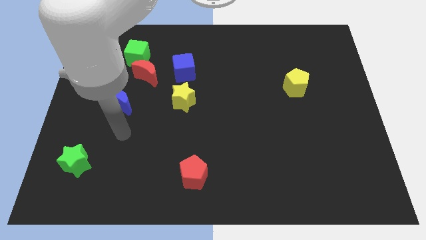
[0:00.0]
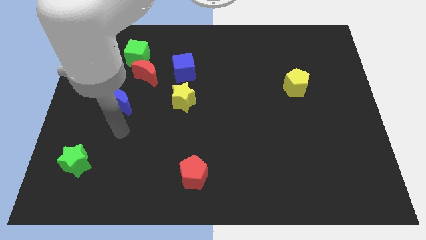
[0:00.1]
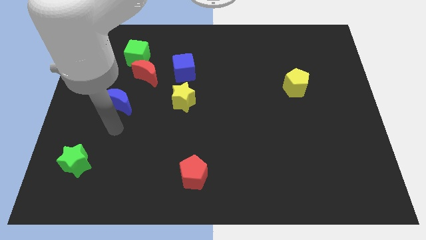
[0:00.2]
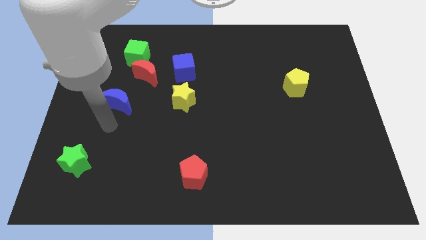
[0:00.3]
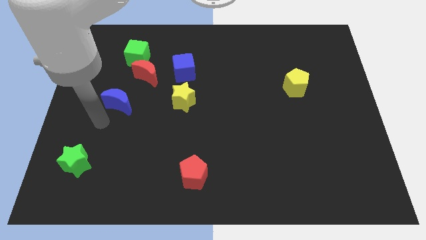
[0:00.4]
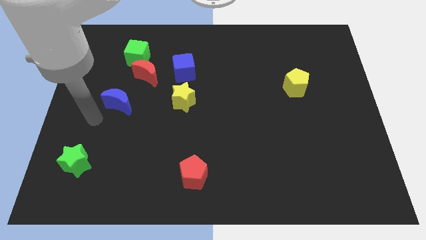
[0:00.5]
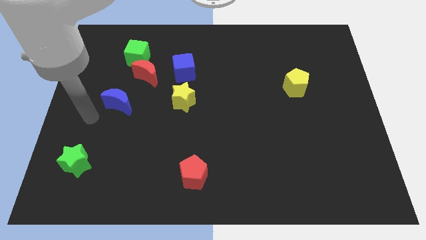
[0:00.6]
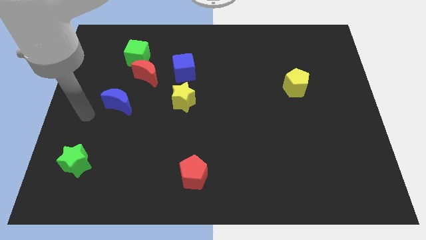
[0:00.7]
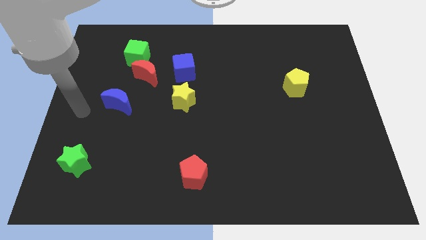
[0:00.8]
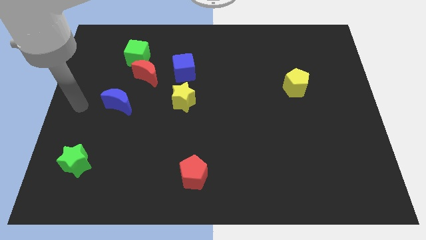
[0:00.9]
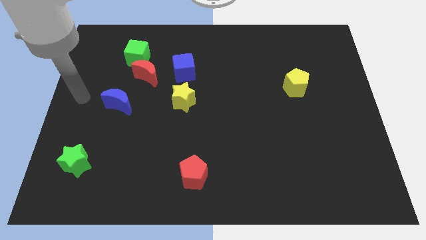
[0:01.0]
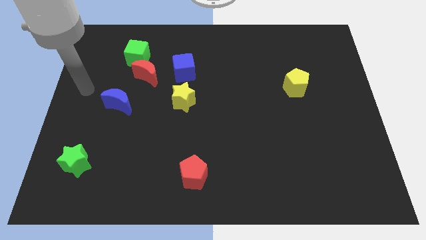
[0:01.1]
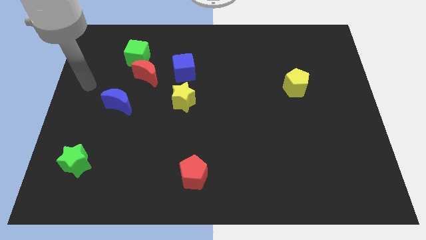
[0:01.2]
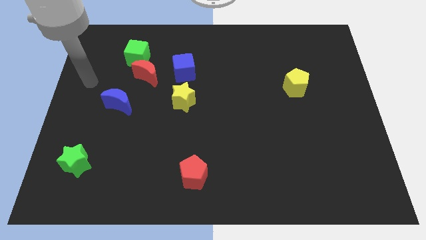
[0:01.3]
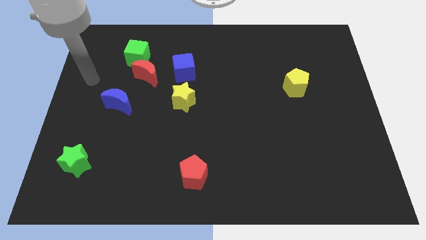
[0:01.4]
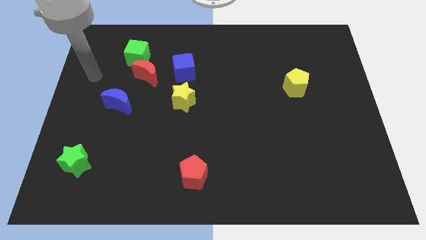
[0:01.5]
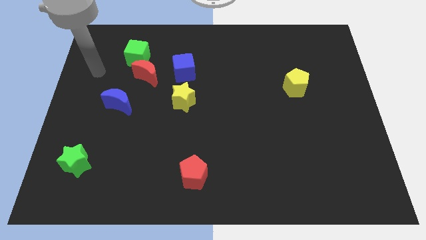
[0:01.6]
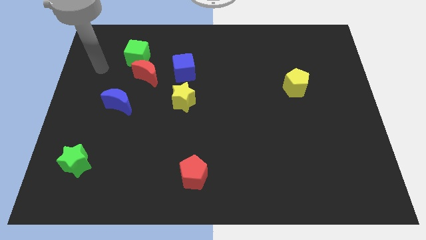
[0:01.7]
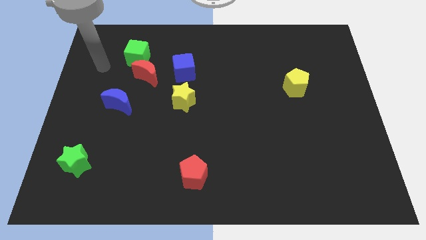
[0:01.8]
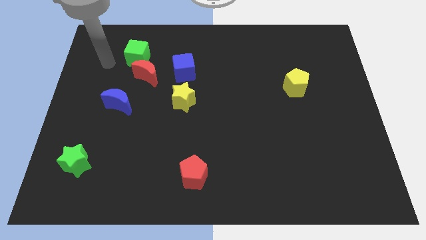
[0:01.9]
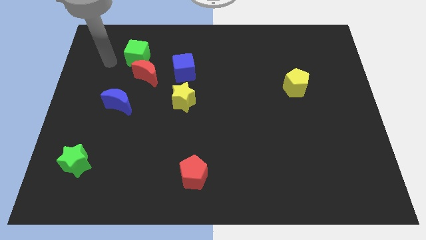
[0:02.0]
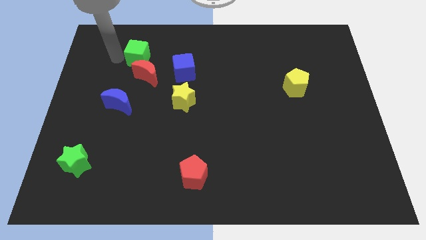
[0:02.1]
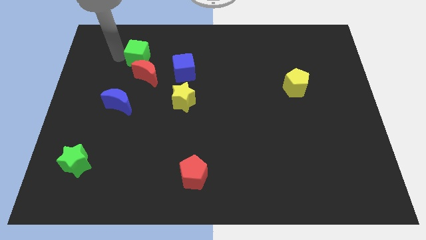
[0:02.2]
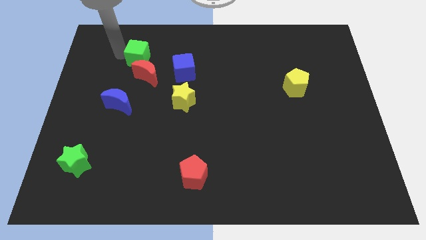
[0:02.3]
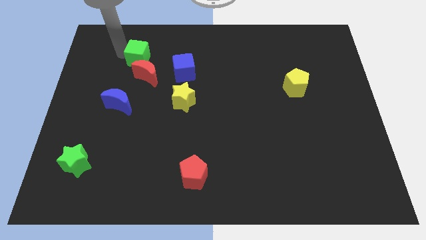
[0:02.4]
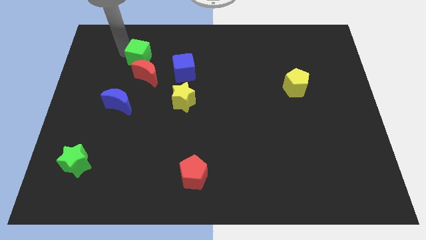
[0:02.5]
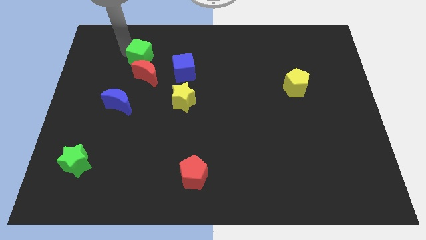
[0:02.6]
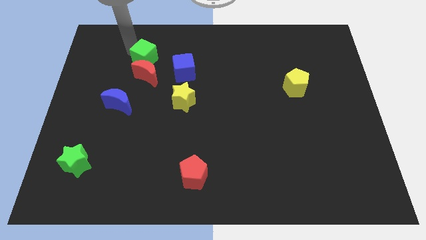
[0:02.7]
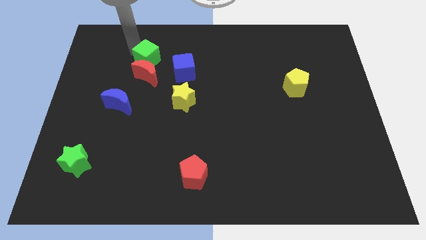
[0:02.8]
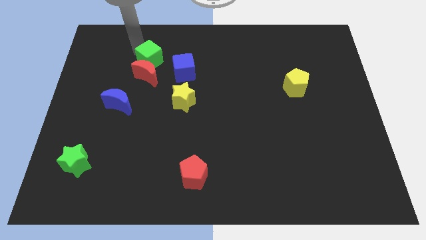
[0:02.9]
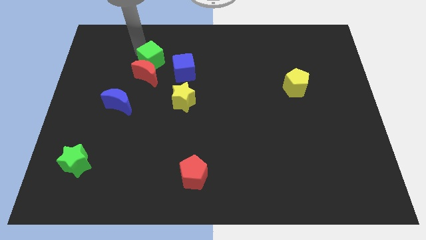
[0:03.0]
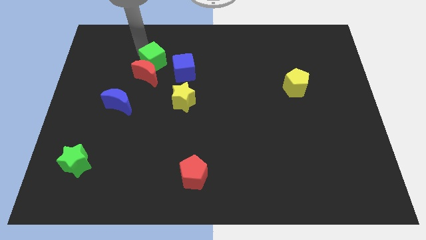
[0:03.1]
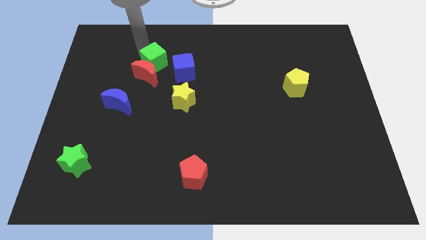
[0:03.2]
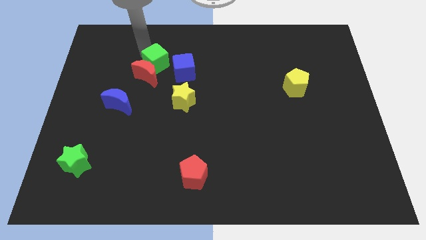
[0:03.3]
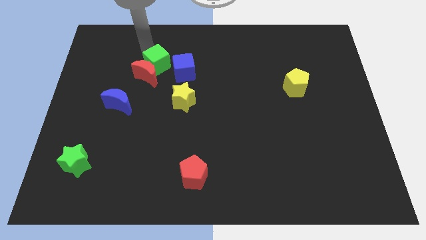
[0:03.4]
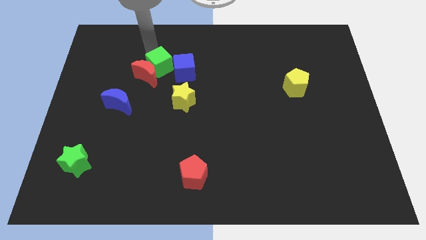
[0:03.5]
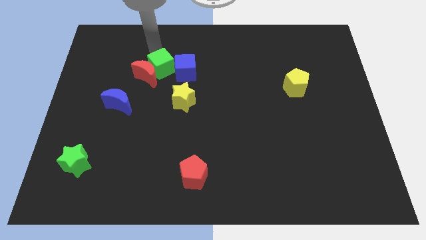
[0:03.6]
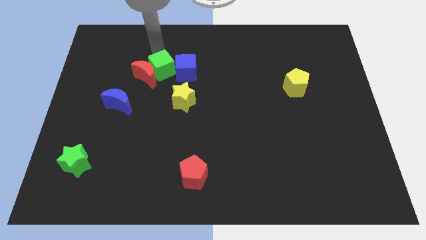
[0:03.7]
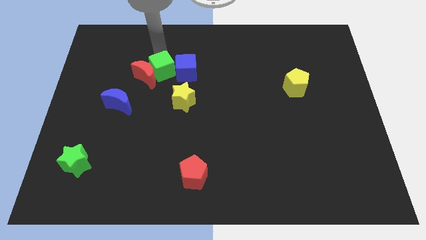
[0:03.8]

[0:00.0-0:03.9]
put the green cube next to the blue cube

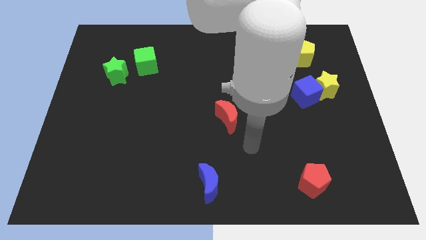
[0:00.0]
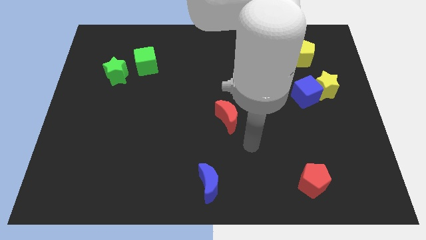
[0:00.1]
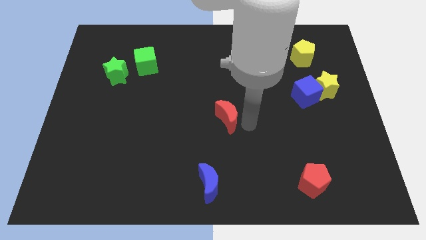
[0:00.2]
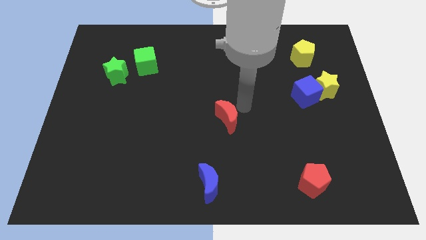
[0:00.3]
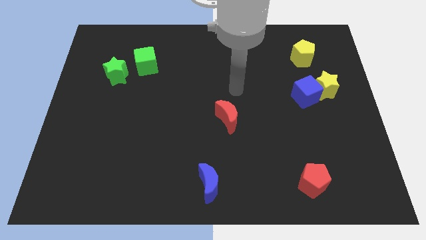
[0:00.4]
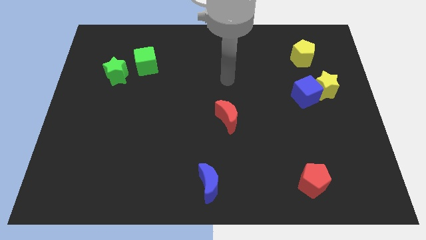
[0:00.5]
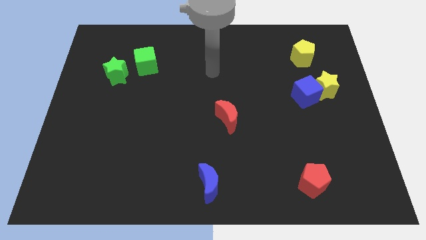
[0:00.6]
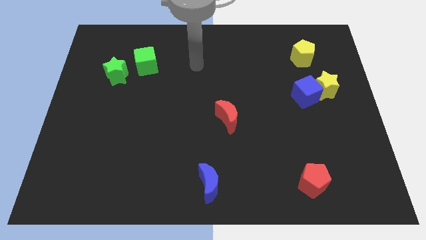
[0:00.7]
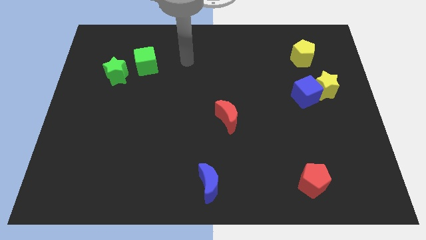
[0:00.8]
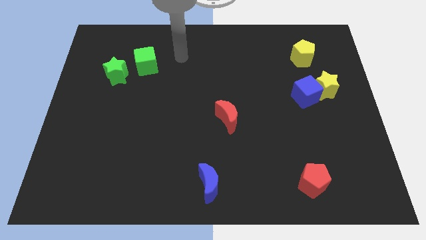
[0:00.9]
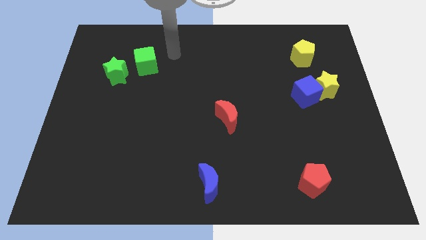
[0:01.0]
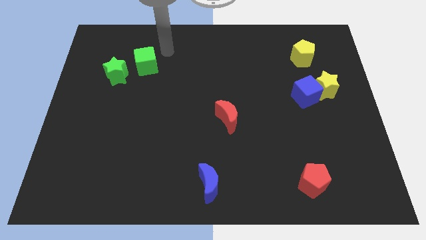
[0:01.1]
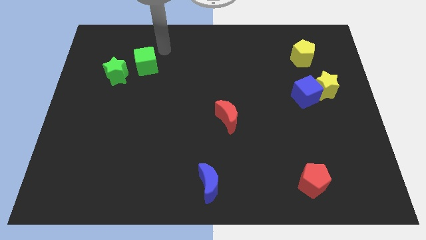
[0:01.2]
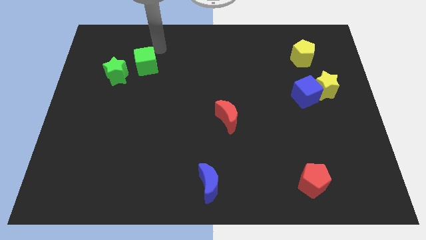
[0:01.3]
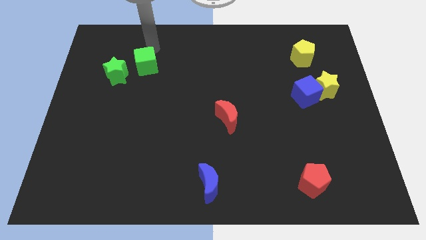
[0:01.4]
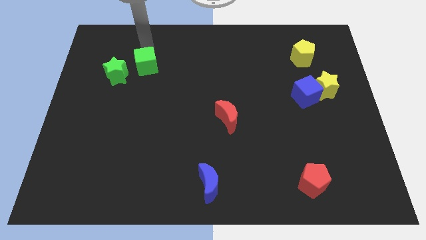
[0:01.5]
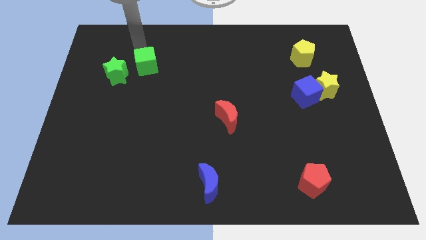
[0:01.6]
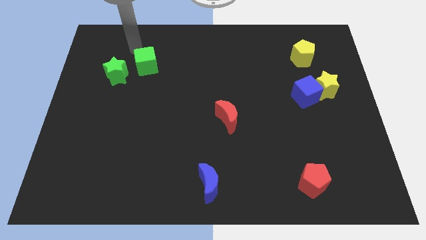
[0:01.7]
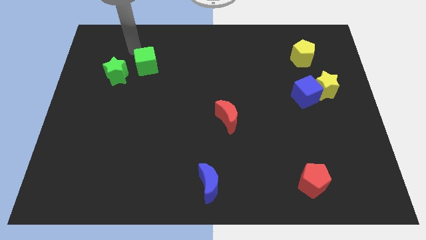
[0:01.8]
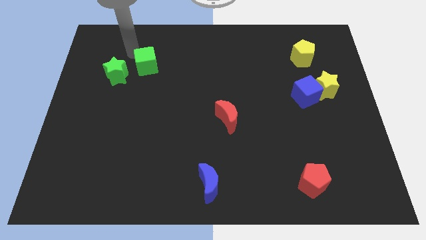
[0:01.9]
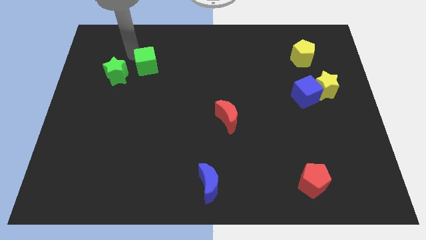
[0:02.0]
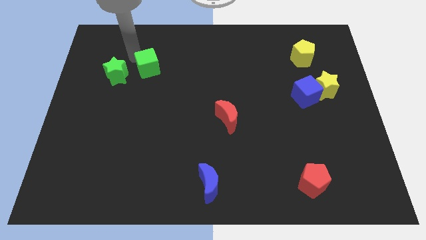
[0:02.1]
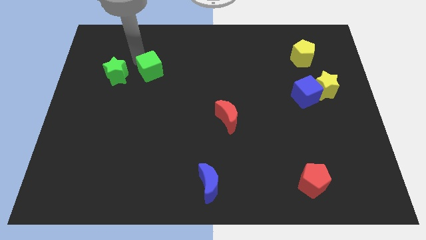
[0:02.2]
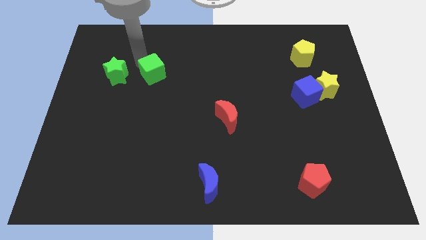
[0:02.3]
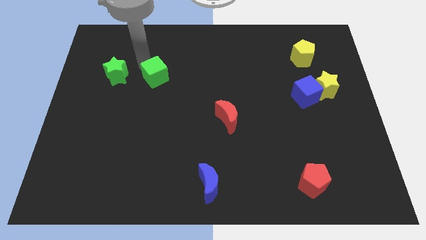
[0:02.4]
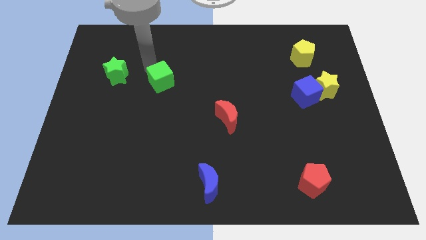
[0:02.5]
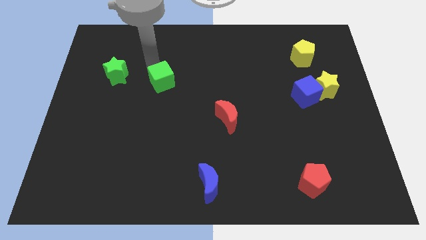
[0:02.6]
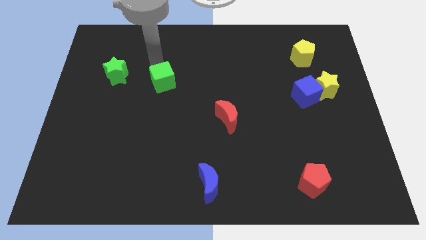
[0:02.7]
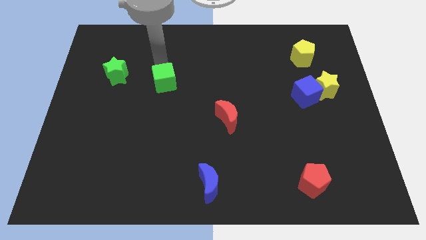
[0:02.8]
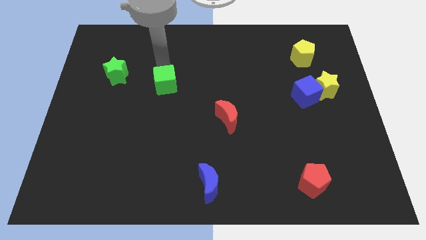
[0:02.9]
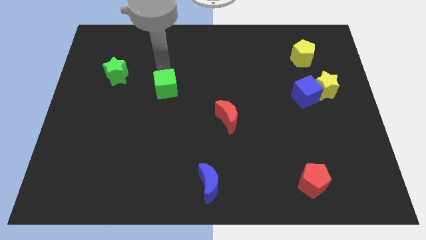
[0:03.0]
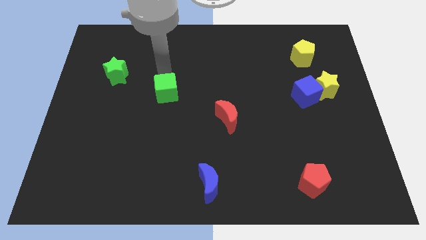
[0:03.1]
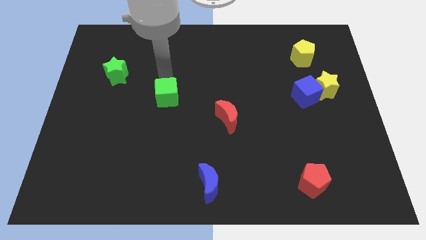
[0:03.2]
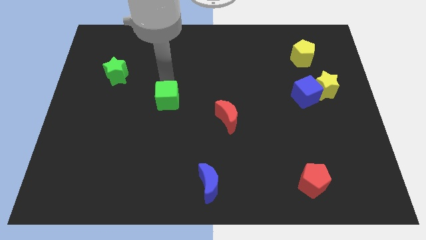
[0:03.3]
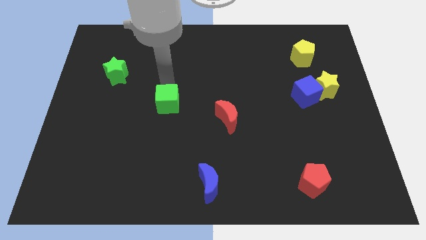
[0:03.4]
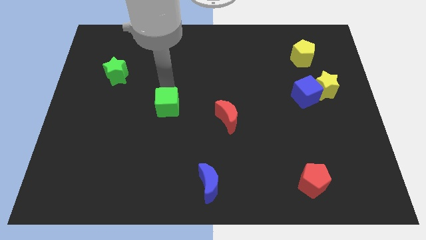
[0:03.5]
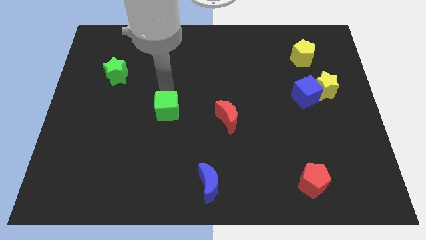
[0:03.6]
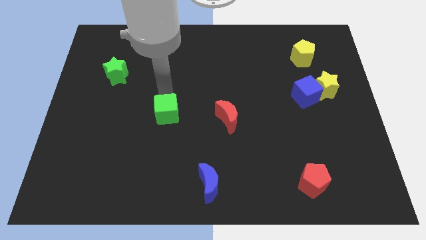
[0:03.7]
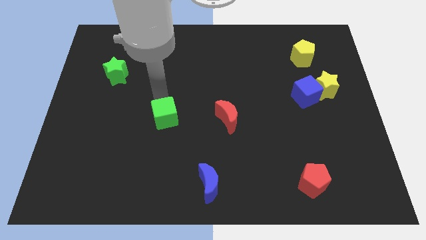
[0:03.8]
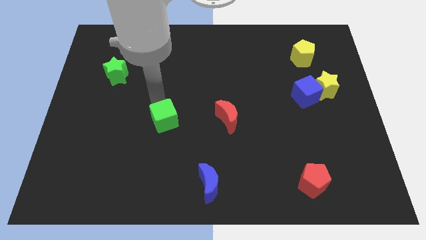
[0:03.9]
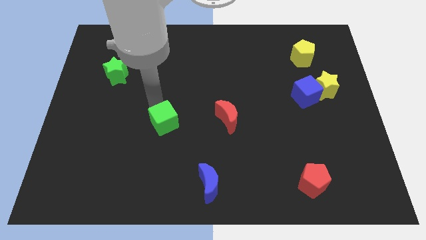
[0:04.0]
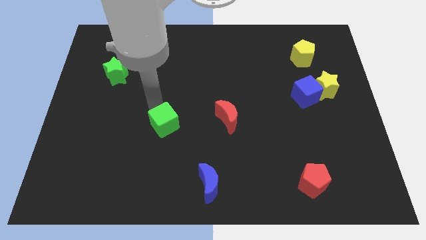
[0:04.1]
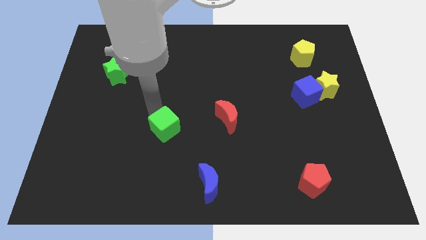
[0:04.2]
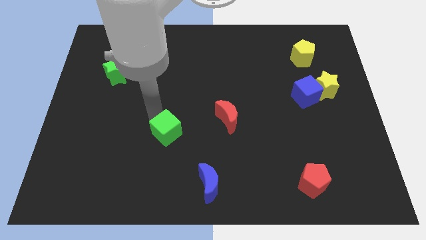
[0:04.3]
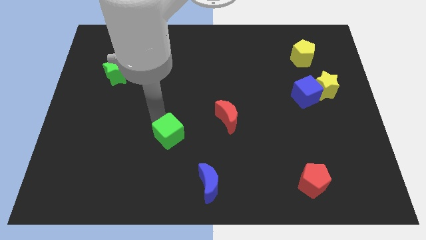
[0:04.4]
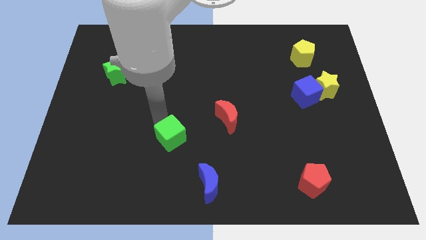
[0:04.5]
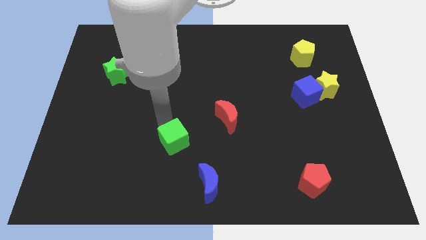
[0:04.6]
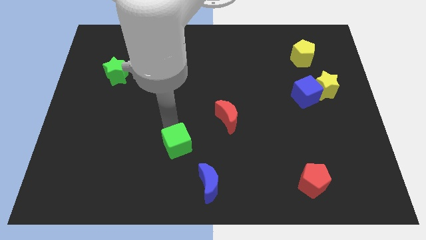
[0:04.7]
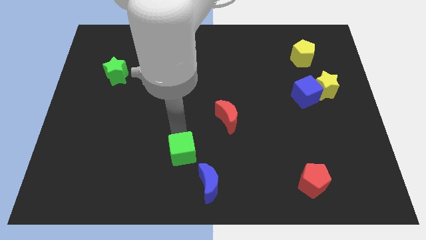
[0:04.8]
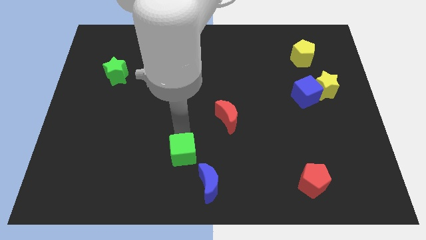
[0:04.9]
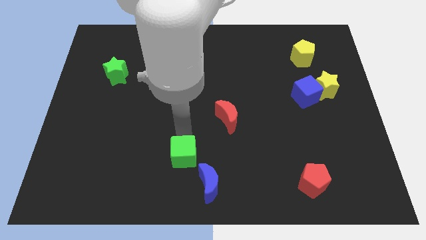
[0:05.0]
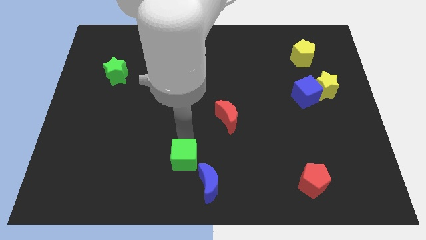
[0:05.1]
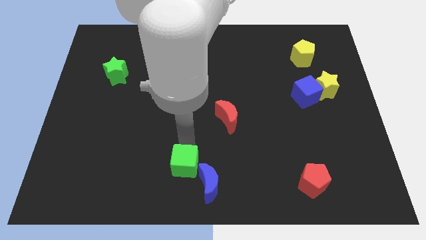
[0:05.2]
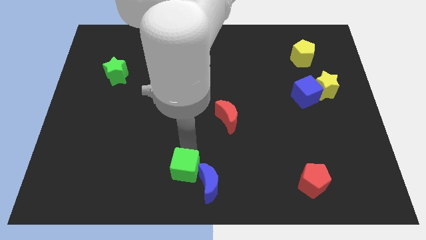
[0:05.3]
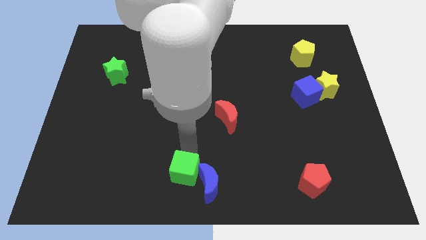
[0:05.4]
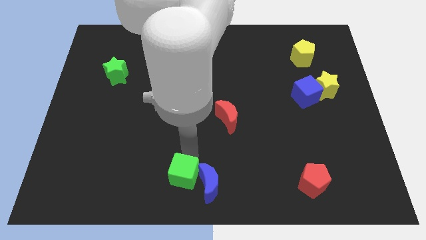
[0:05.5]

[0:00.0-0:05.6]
move the green cube close to the blue moon
